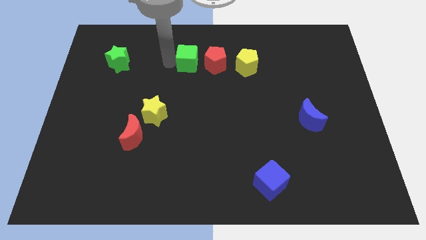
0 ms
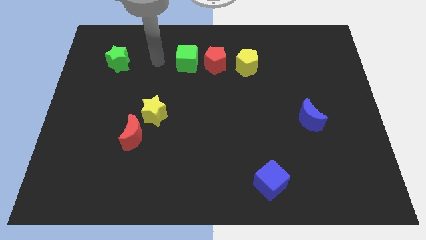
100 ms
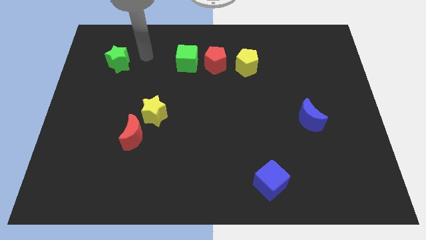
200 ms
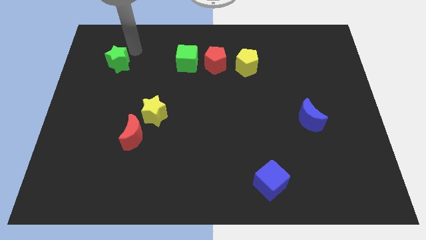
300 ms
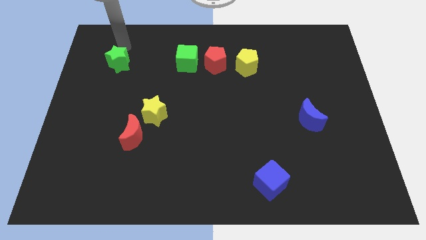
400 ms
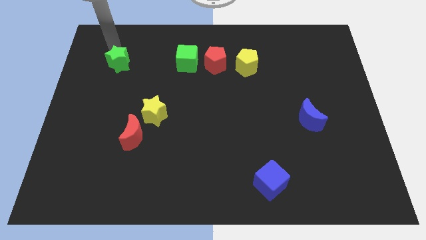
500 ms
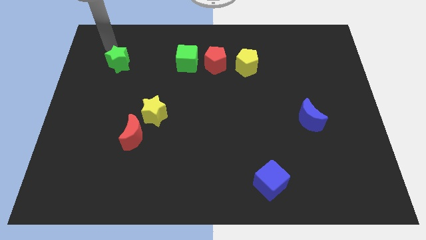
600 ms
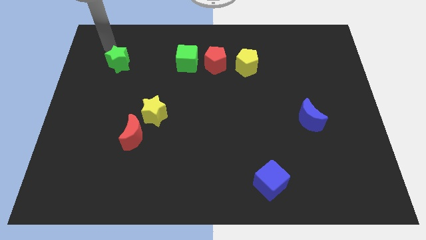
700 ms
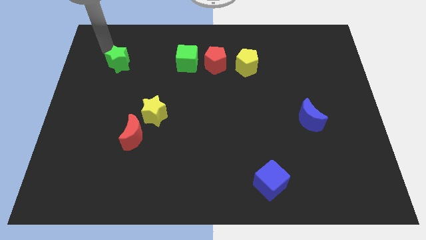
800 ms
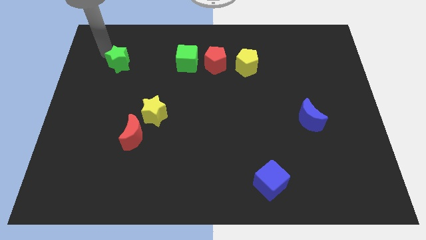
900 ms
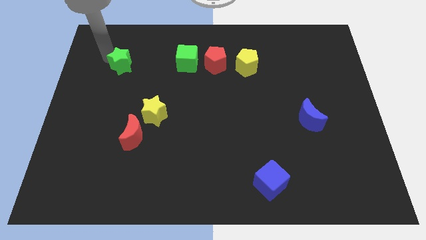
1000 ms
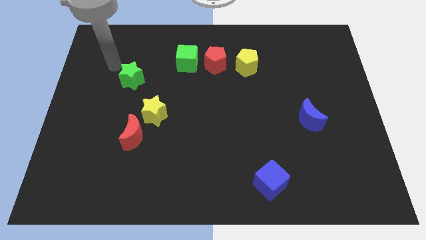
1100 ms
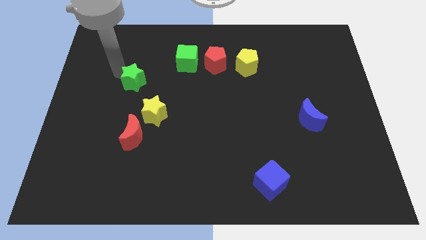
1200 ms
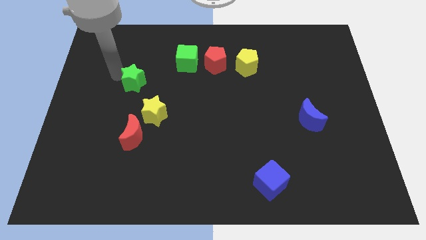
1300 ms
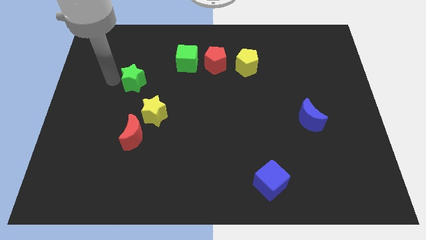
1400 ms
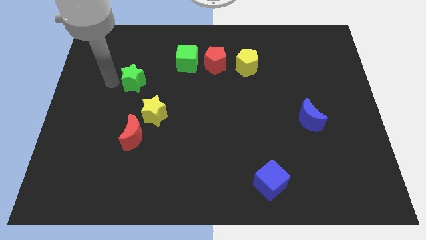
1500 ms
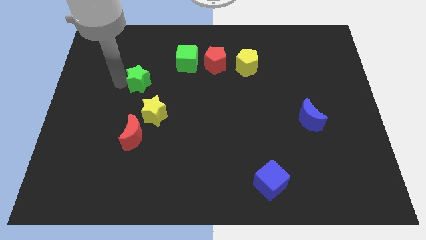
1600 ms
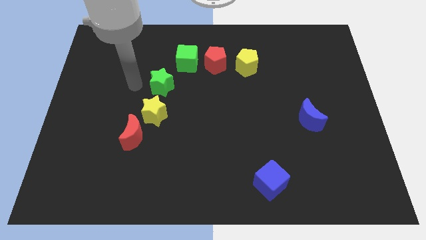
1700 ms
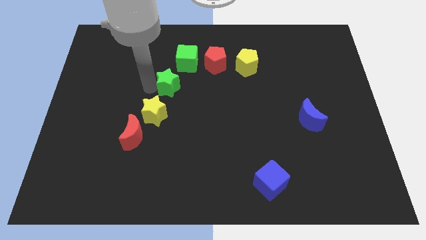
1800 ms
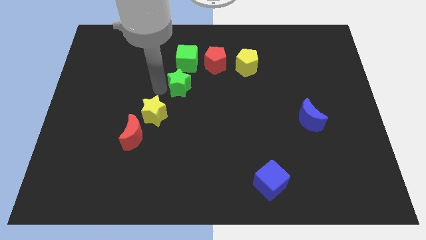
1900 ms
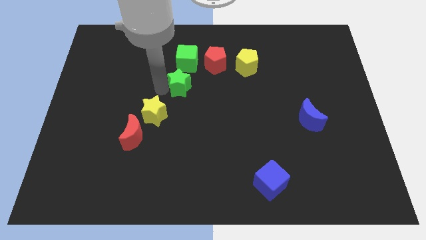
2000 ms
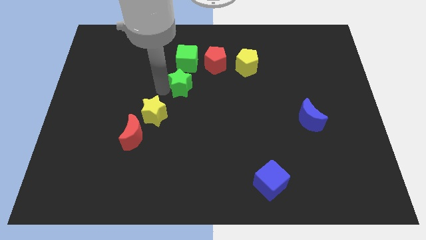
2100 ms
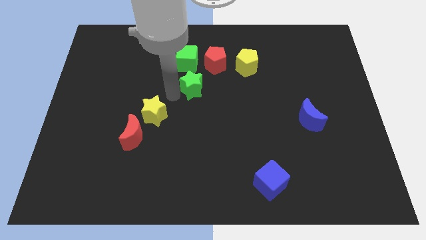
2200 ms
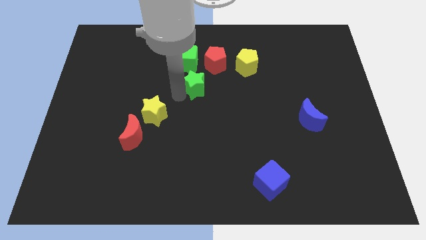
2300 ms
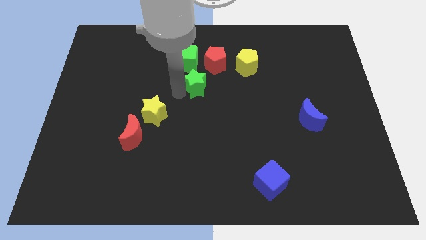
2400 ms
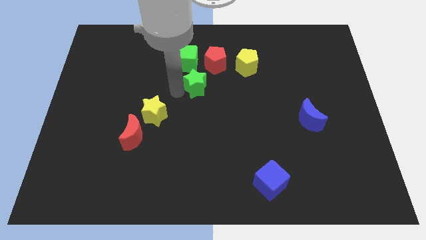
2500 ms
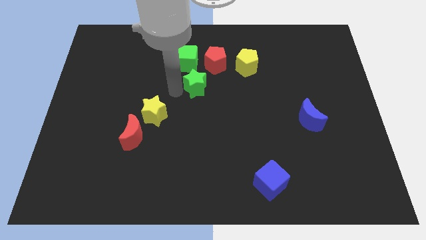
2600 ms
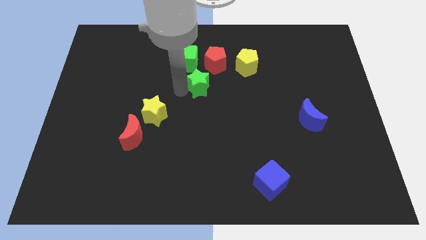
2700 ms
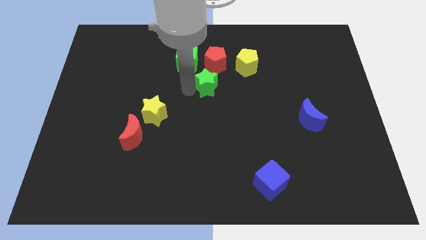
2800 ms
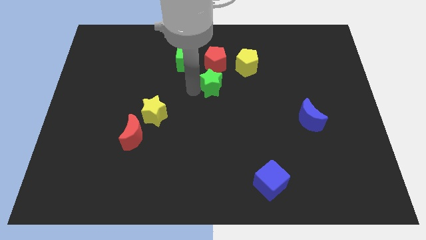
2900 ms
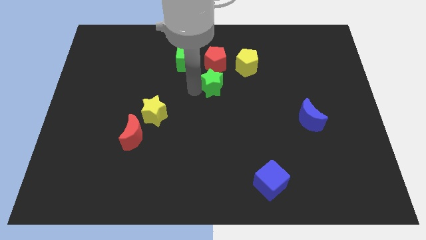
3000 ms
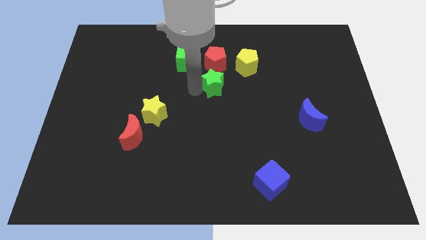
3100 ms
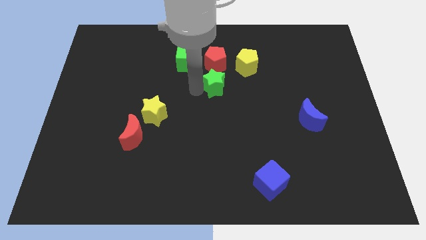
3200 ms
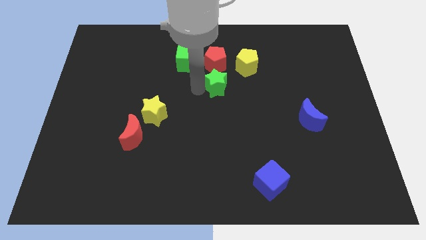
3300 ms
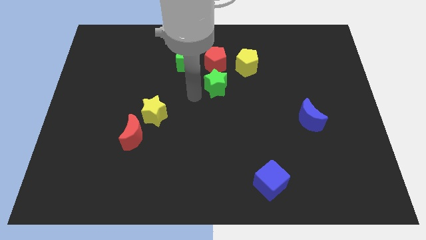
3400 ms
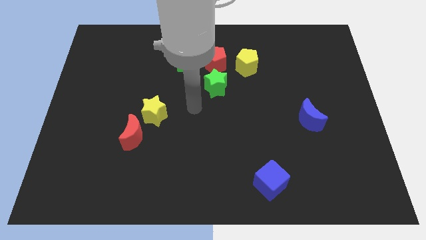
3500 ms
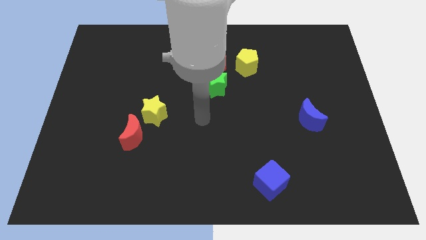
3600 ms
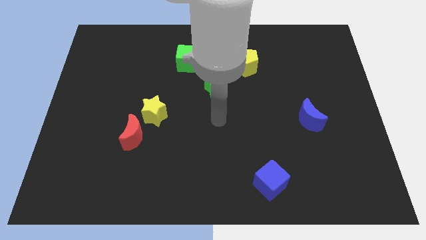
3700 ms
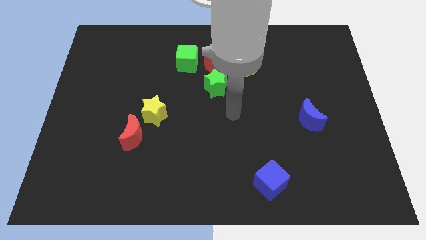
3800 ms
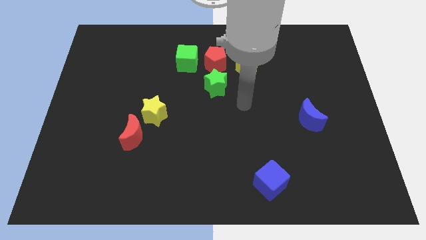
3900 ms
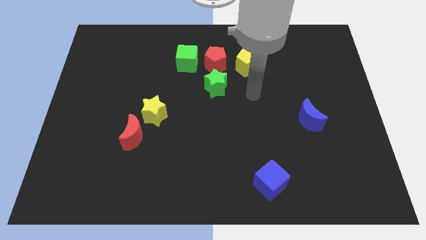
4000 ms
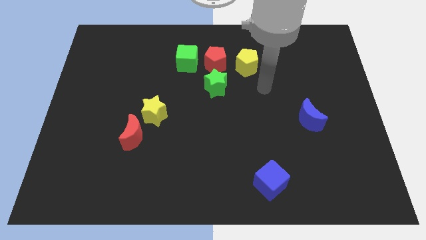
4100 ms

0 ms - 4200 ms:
push the green star to the bottom of the red pentagon

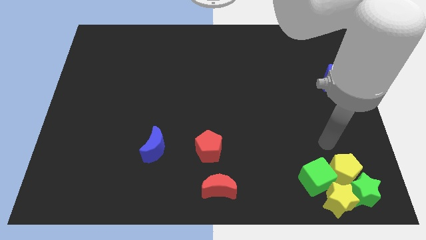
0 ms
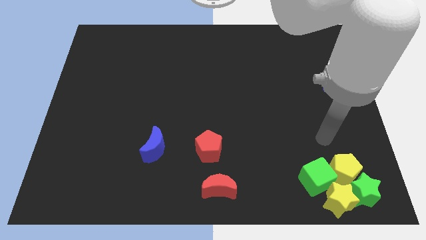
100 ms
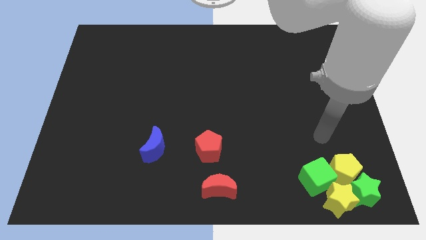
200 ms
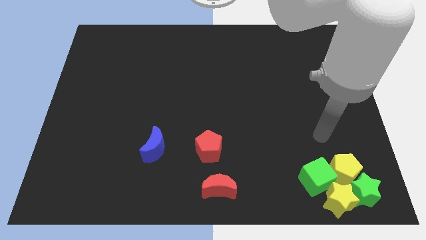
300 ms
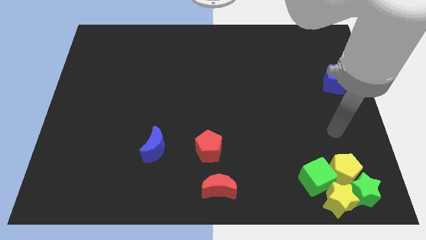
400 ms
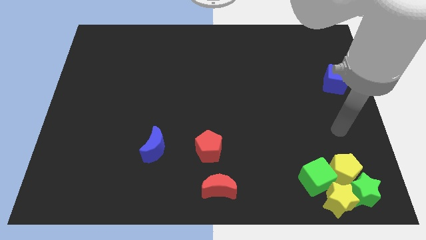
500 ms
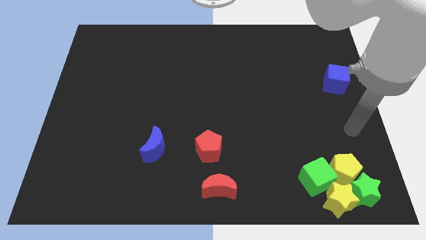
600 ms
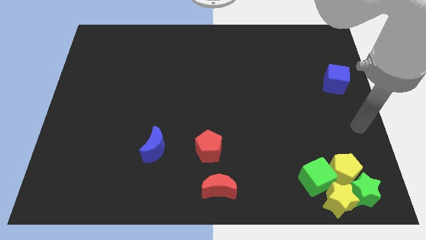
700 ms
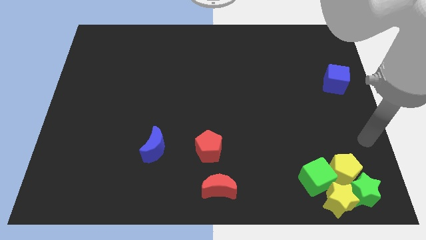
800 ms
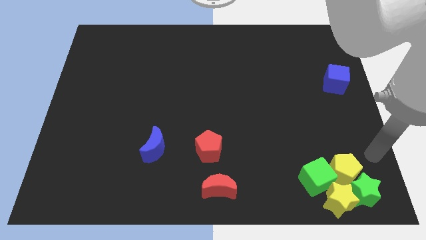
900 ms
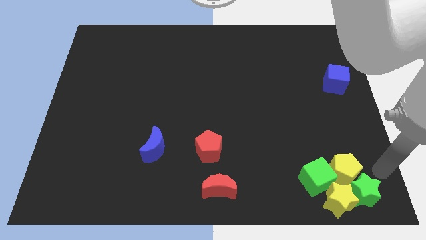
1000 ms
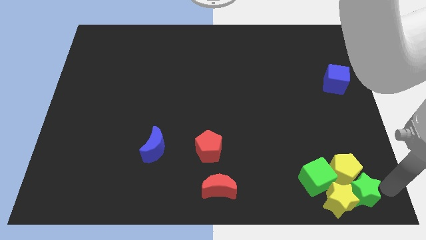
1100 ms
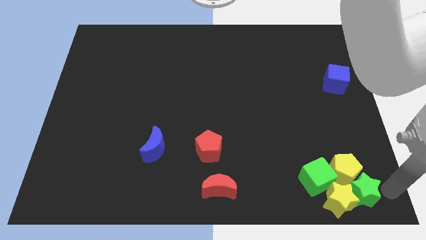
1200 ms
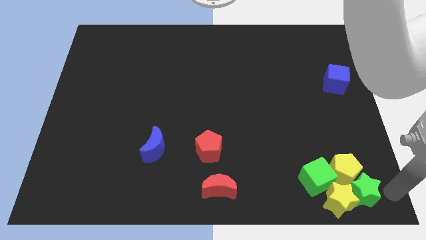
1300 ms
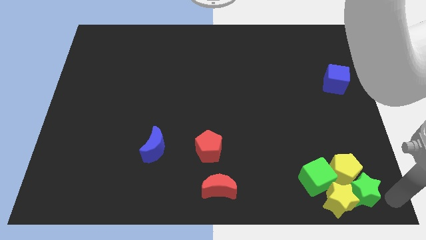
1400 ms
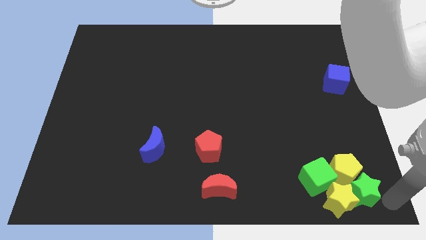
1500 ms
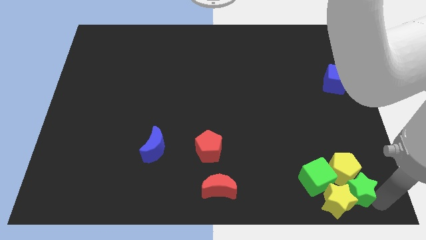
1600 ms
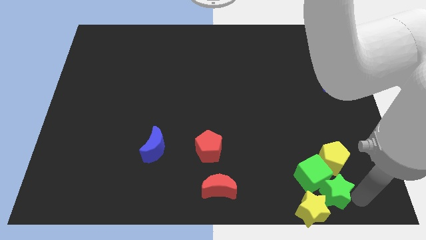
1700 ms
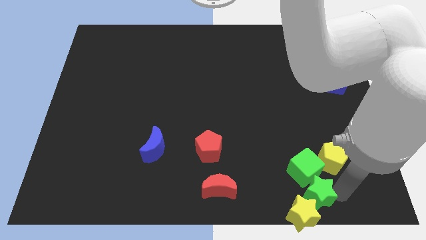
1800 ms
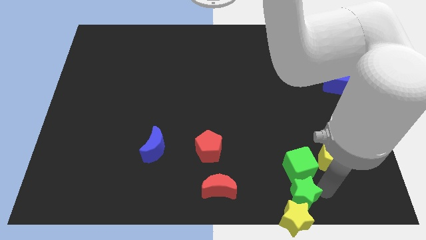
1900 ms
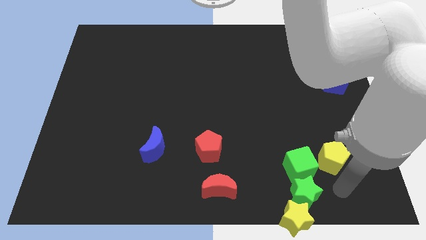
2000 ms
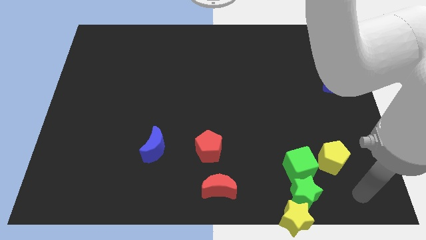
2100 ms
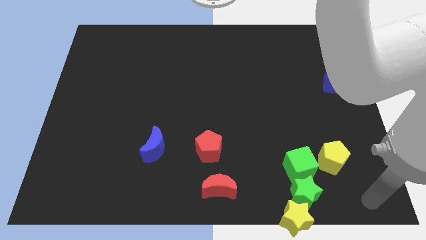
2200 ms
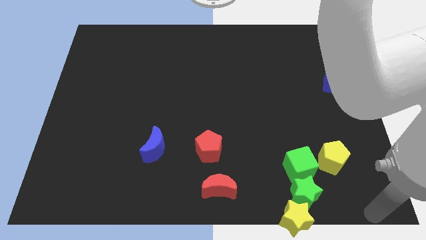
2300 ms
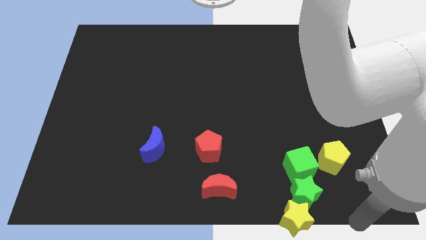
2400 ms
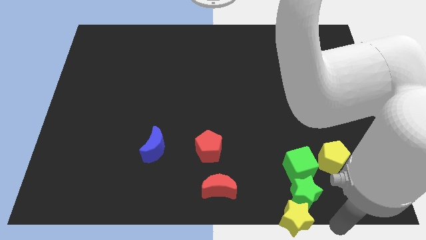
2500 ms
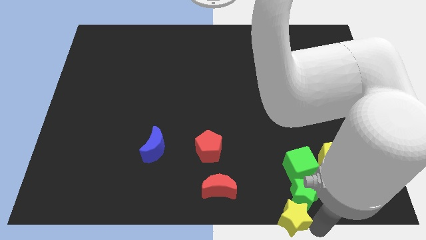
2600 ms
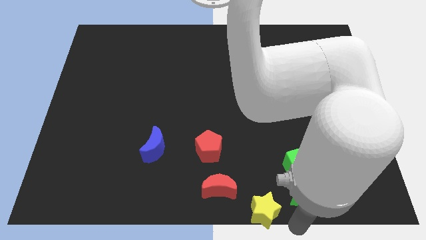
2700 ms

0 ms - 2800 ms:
move the yellow star below the green star

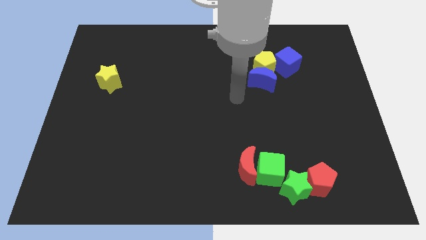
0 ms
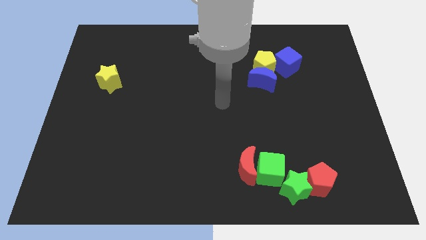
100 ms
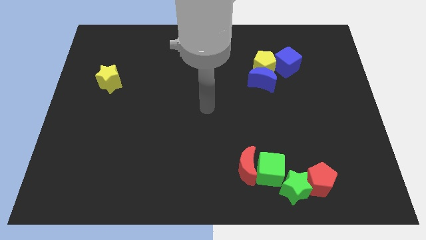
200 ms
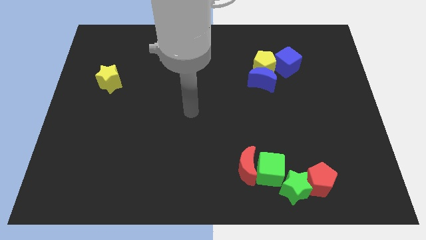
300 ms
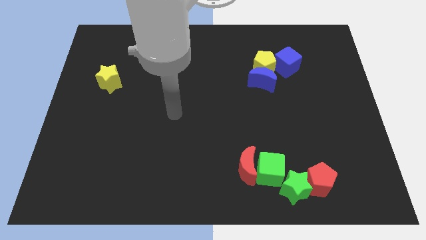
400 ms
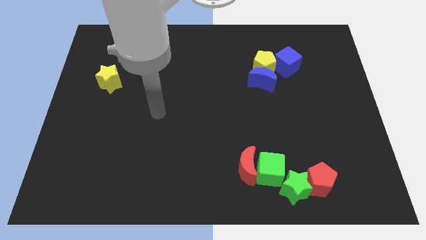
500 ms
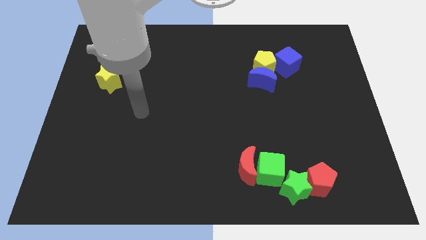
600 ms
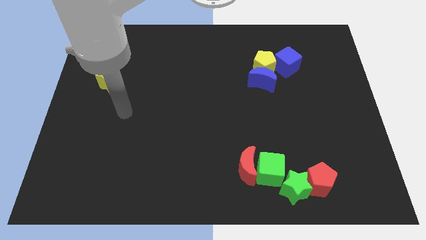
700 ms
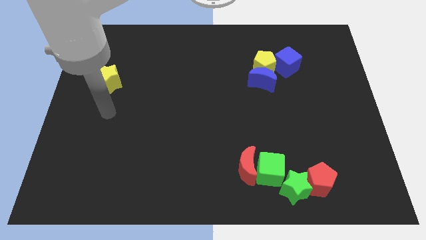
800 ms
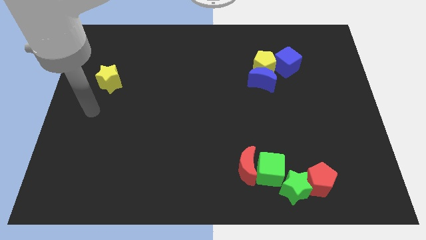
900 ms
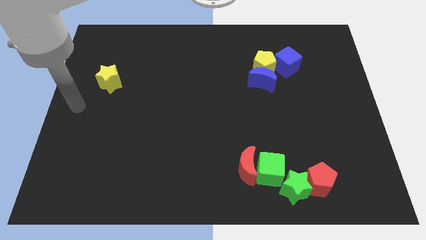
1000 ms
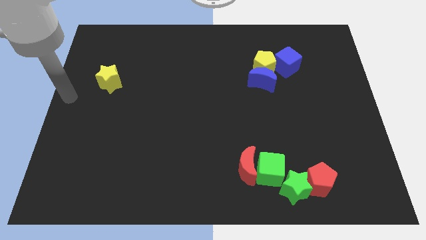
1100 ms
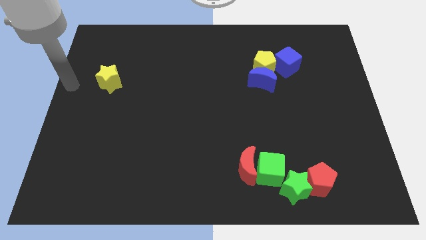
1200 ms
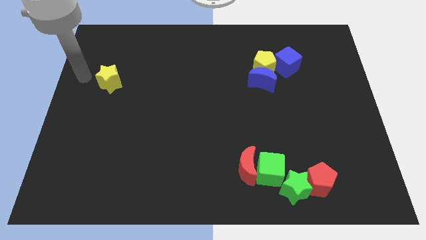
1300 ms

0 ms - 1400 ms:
move your hand to the left of the yellow star

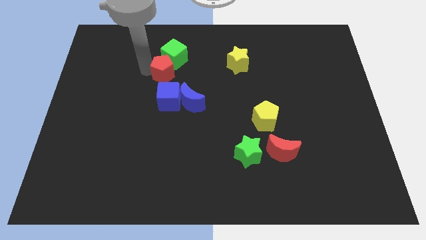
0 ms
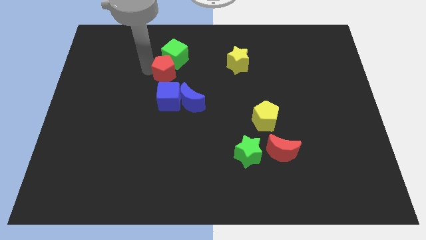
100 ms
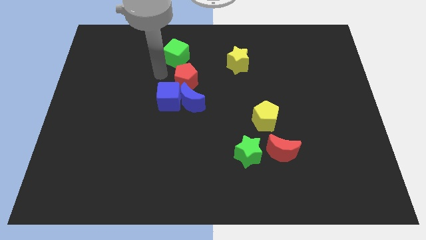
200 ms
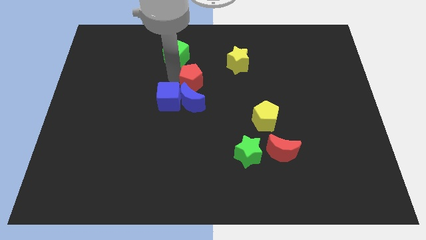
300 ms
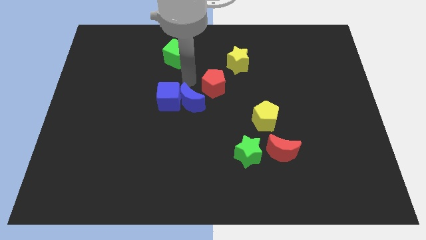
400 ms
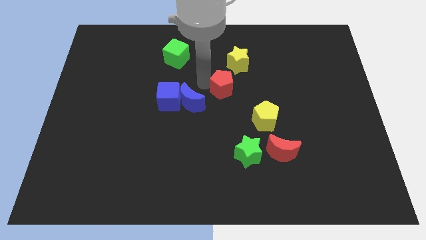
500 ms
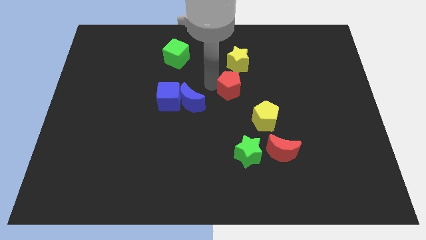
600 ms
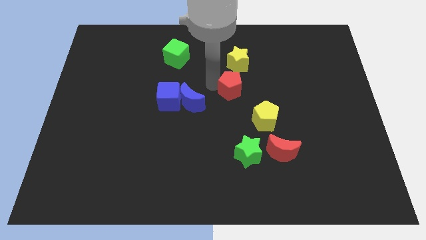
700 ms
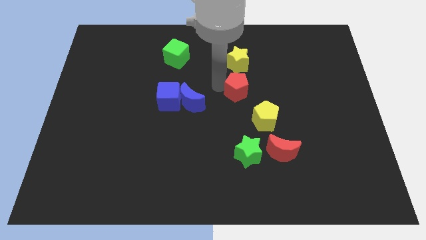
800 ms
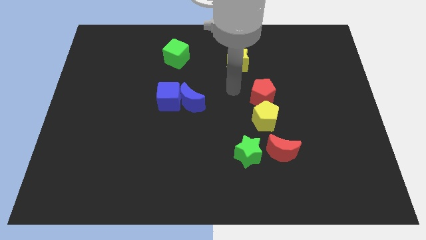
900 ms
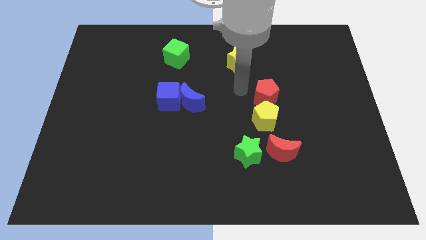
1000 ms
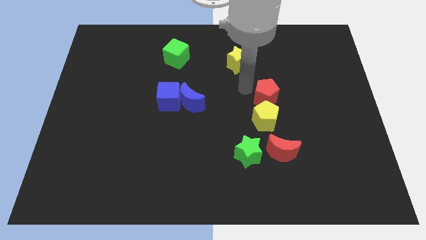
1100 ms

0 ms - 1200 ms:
place red pentagon vertical to yellow pentgaon
